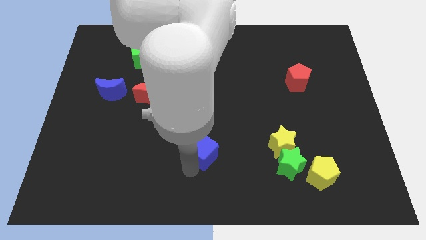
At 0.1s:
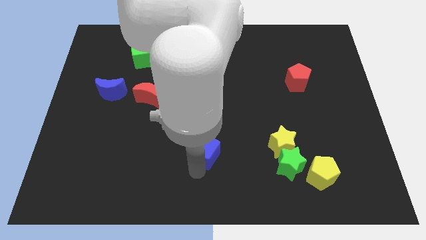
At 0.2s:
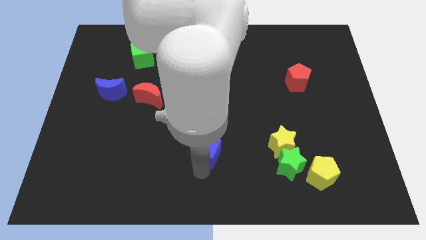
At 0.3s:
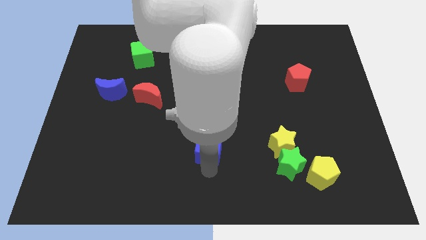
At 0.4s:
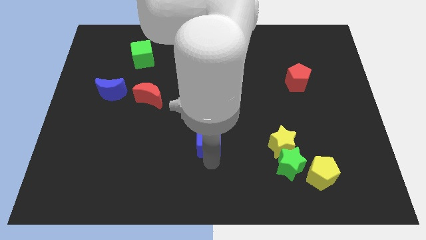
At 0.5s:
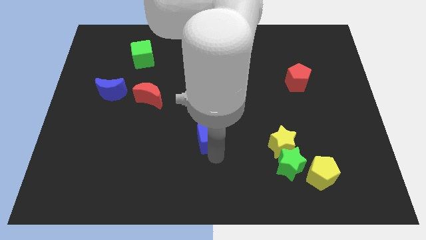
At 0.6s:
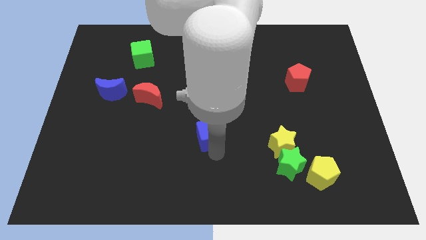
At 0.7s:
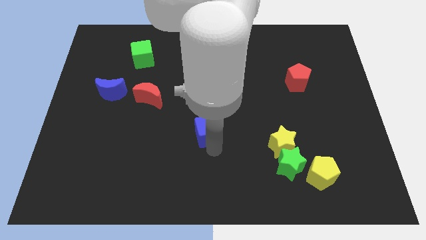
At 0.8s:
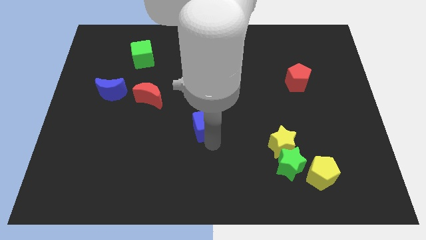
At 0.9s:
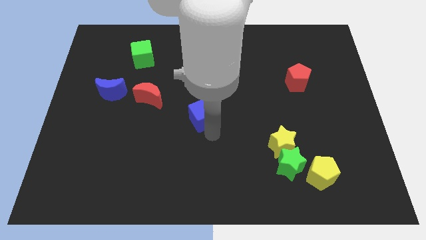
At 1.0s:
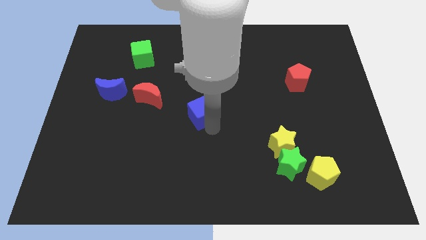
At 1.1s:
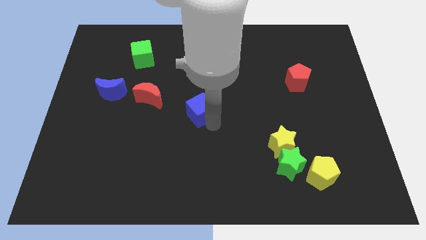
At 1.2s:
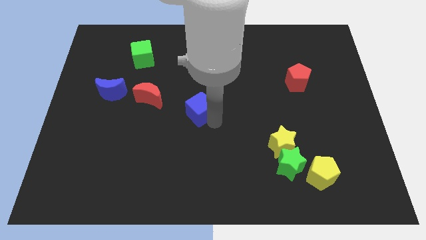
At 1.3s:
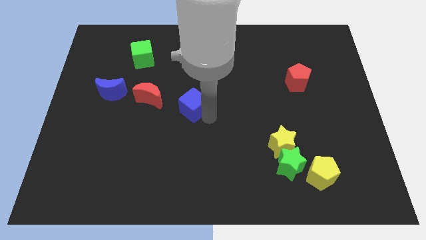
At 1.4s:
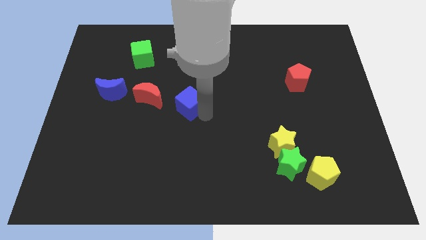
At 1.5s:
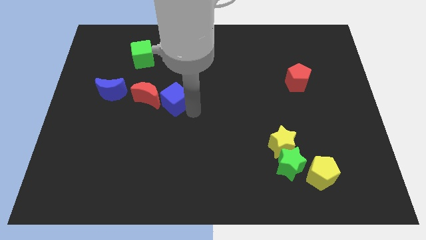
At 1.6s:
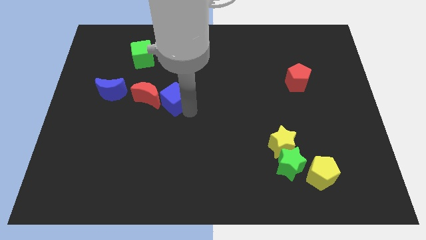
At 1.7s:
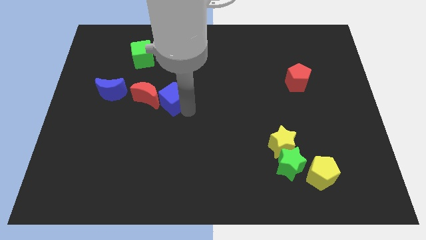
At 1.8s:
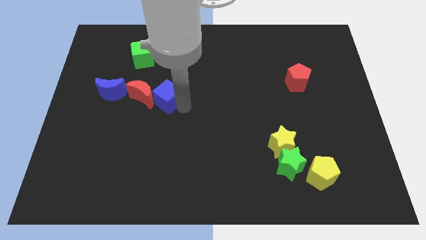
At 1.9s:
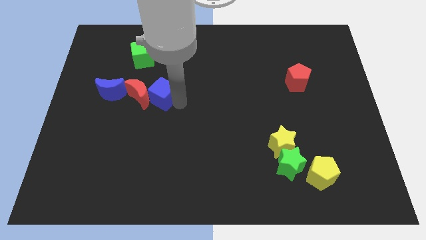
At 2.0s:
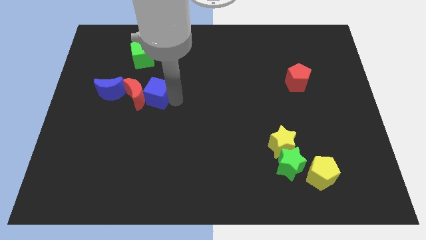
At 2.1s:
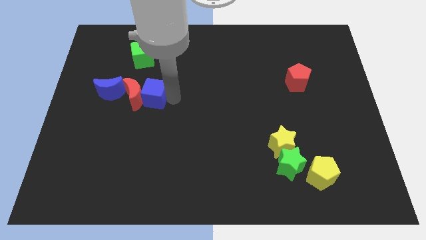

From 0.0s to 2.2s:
place blue cube beside red moon

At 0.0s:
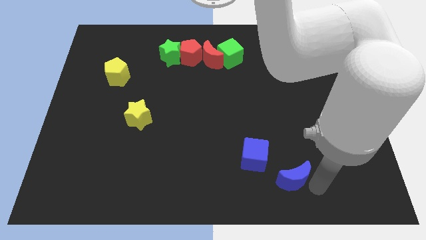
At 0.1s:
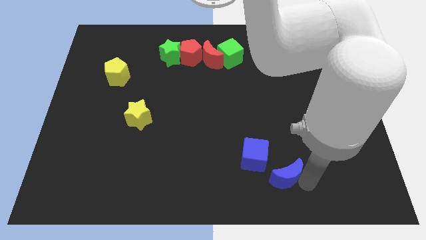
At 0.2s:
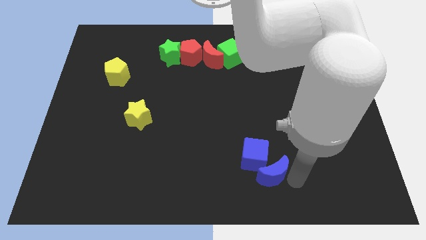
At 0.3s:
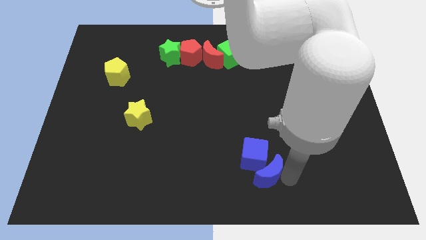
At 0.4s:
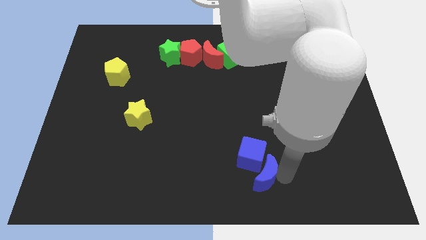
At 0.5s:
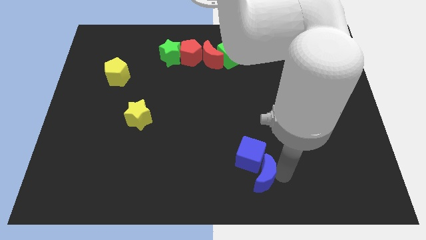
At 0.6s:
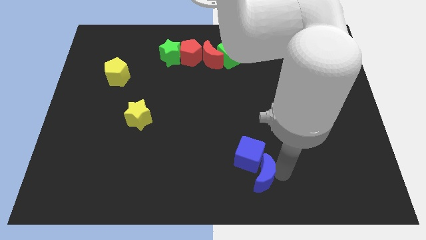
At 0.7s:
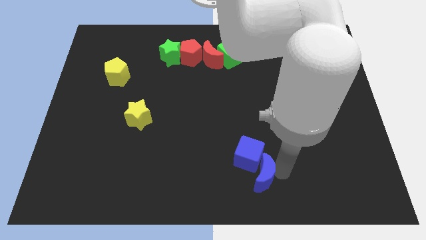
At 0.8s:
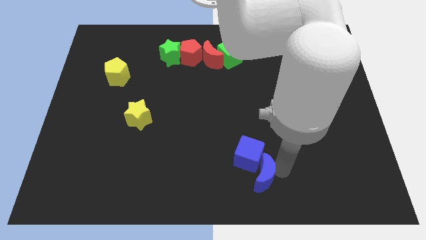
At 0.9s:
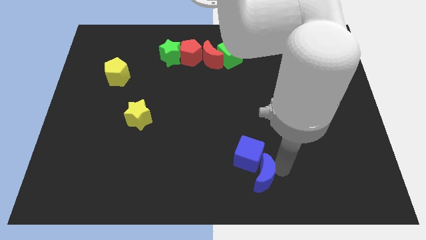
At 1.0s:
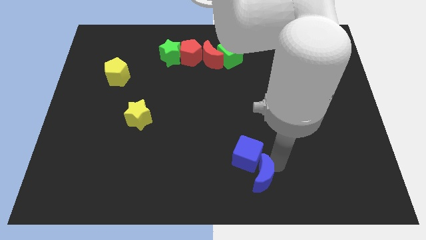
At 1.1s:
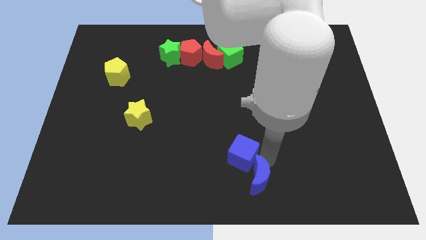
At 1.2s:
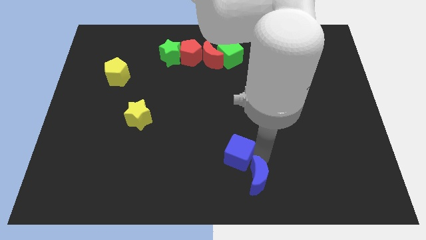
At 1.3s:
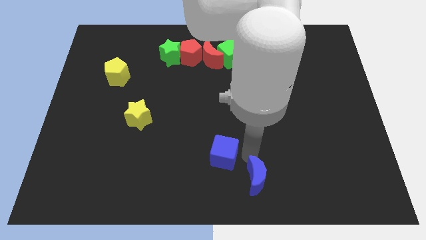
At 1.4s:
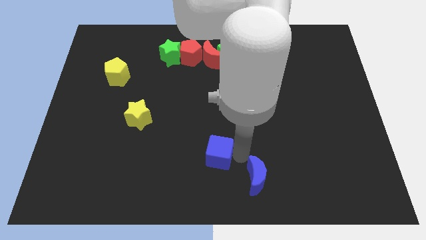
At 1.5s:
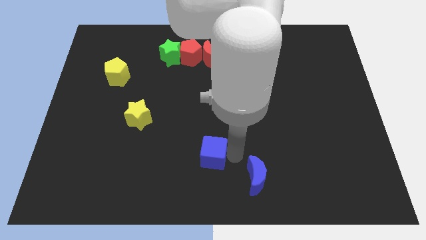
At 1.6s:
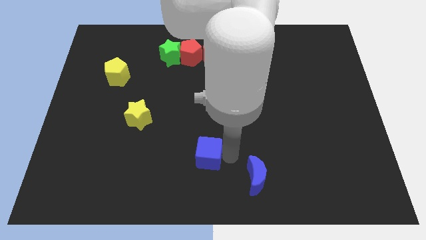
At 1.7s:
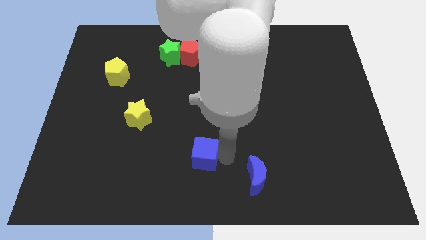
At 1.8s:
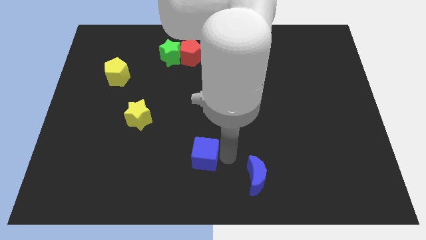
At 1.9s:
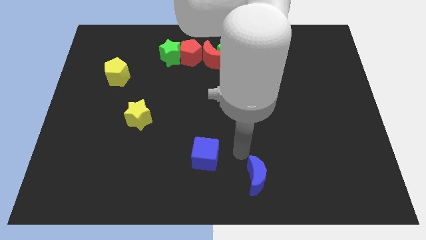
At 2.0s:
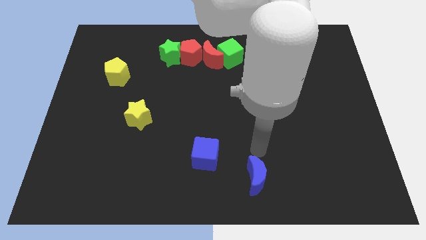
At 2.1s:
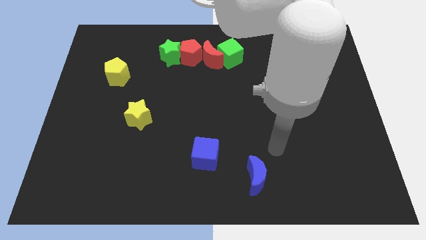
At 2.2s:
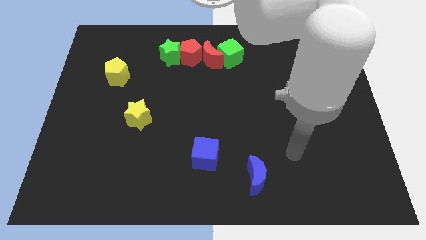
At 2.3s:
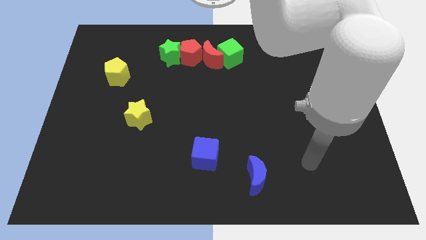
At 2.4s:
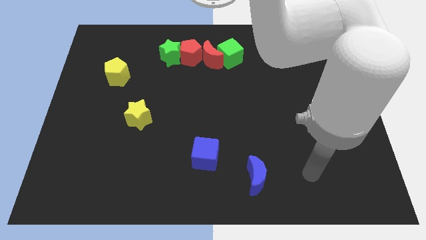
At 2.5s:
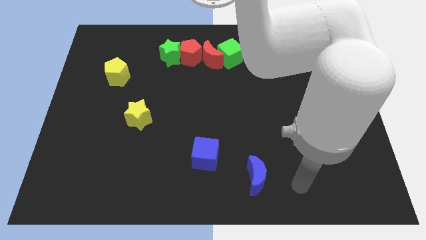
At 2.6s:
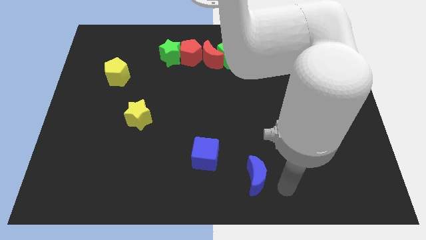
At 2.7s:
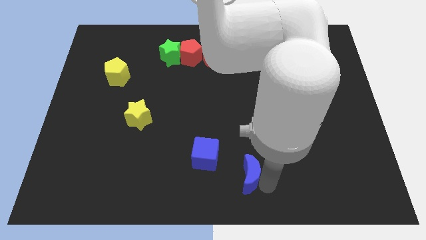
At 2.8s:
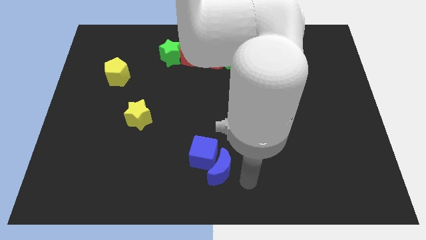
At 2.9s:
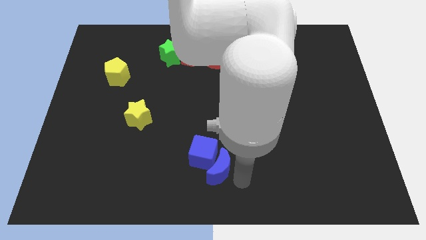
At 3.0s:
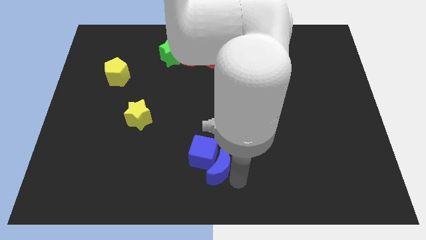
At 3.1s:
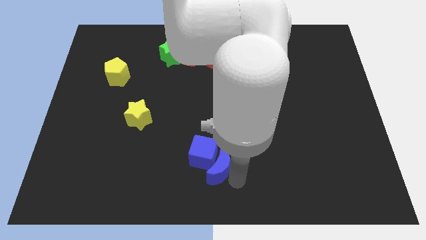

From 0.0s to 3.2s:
place the both blue blocks on the top of the bottom

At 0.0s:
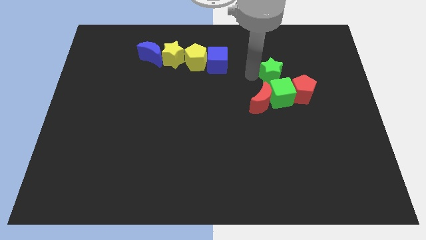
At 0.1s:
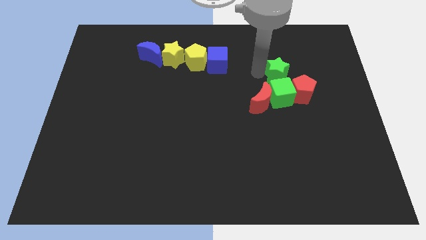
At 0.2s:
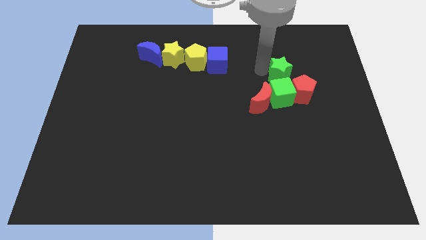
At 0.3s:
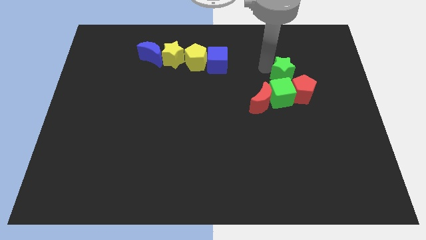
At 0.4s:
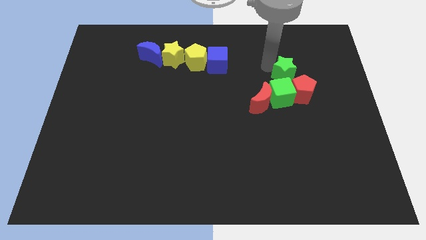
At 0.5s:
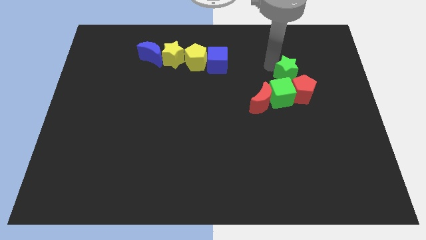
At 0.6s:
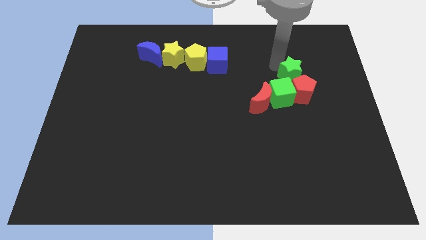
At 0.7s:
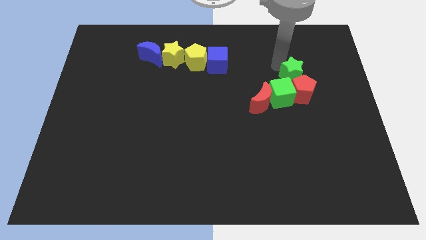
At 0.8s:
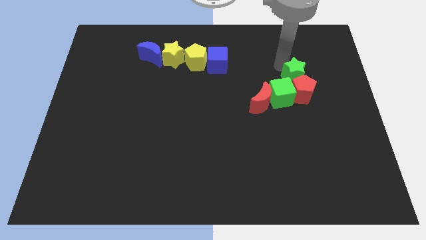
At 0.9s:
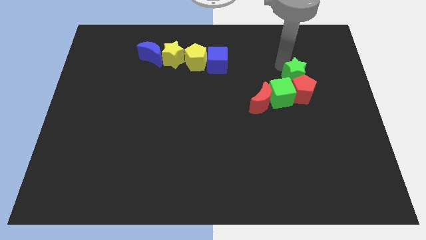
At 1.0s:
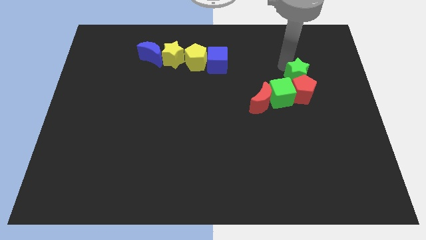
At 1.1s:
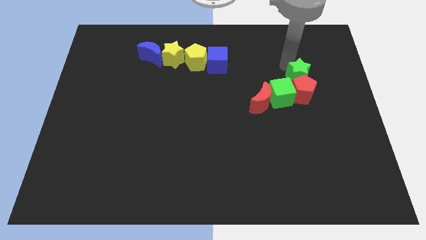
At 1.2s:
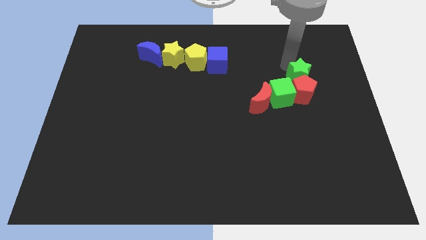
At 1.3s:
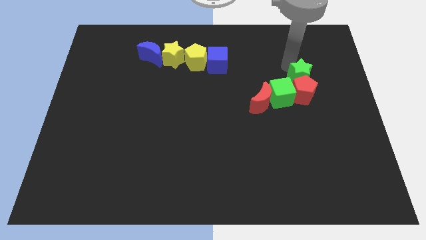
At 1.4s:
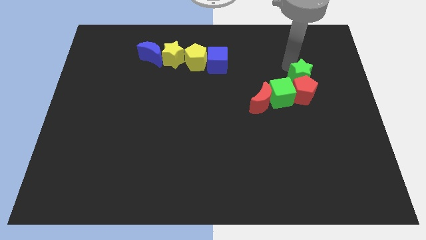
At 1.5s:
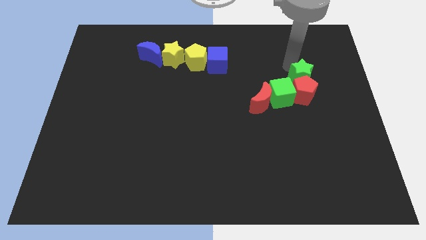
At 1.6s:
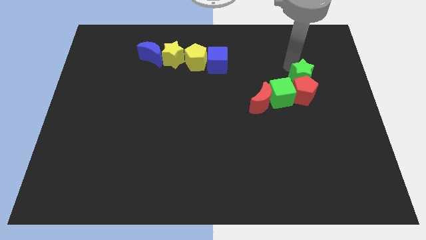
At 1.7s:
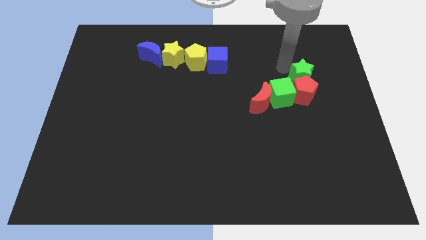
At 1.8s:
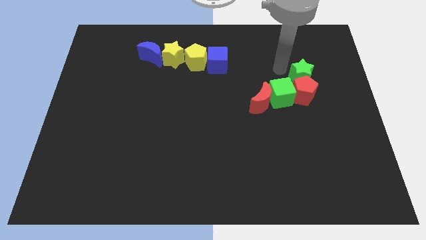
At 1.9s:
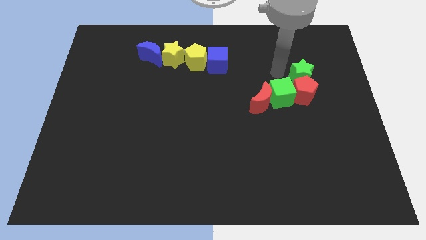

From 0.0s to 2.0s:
move the green star to the top of the red pentagon

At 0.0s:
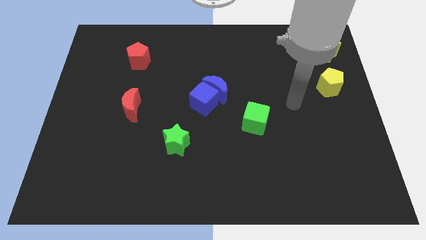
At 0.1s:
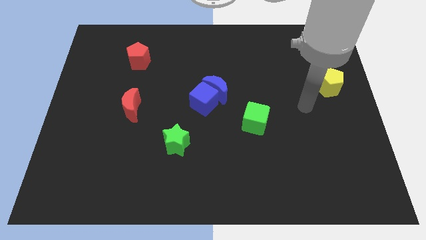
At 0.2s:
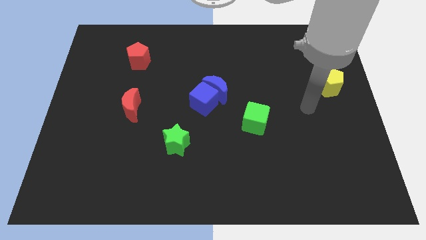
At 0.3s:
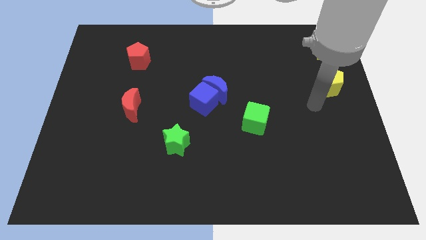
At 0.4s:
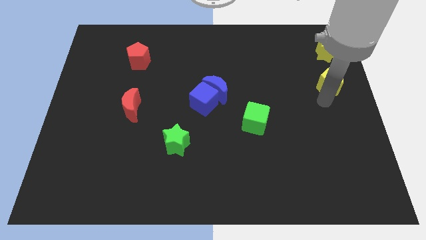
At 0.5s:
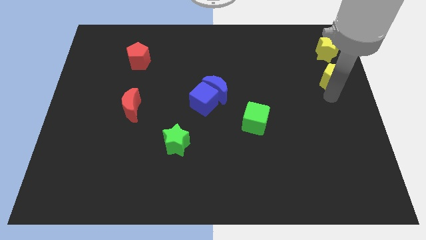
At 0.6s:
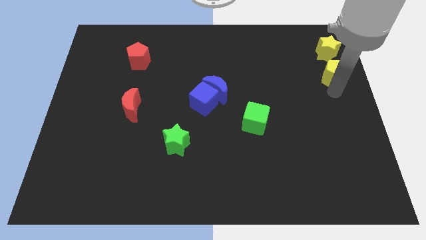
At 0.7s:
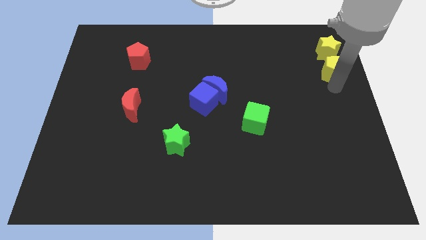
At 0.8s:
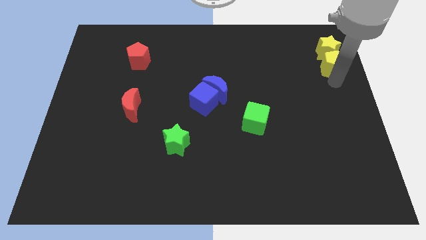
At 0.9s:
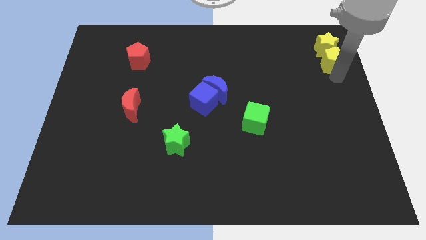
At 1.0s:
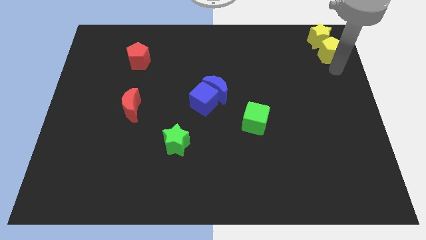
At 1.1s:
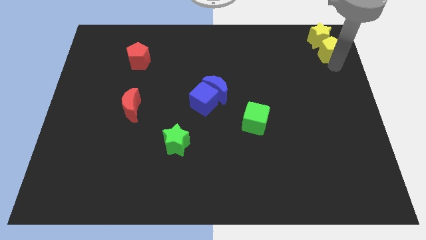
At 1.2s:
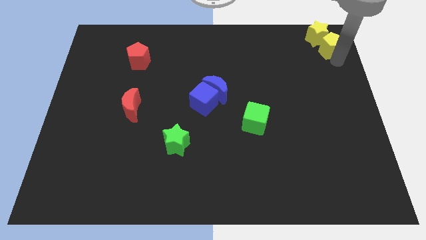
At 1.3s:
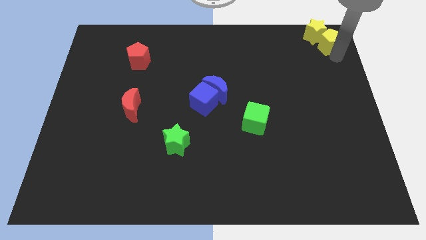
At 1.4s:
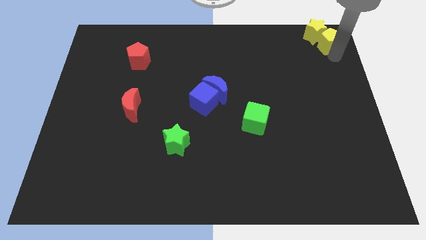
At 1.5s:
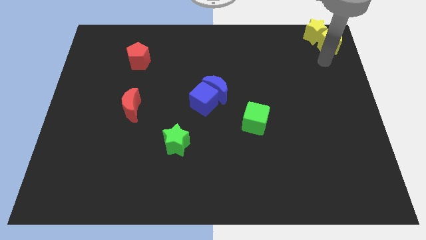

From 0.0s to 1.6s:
push the yellow pentagon into the yellow star
